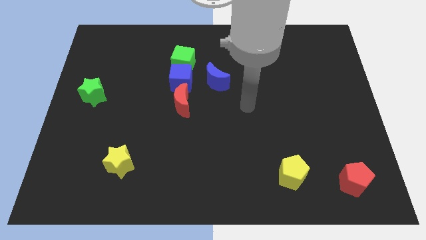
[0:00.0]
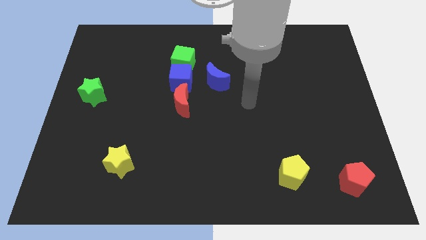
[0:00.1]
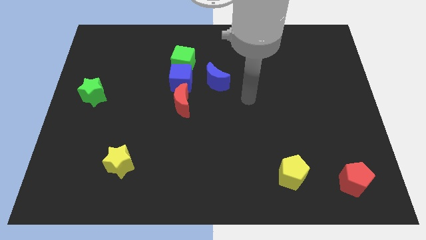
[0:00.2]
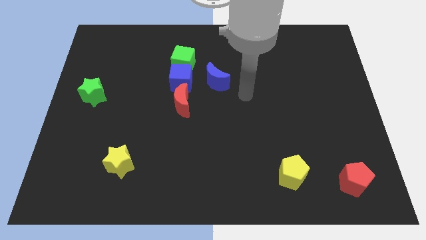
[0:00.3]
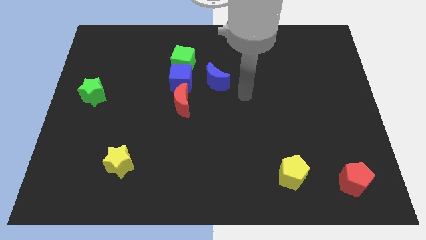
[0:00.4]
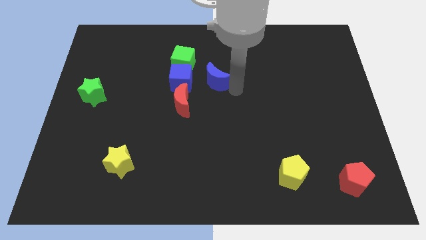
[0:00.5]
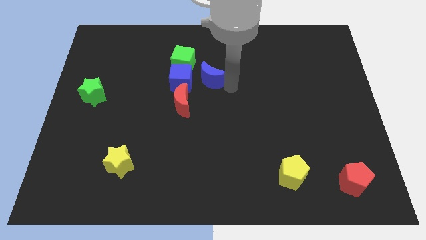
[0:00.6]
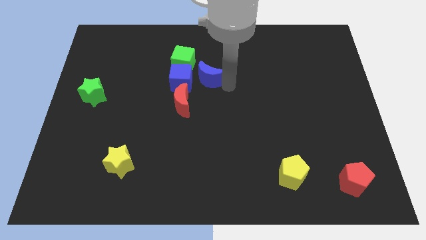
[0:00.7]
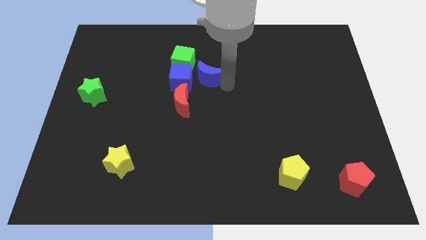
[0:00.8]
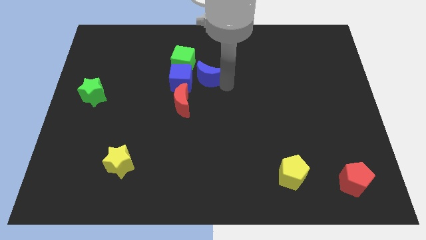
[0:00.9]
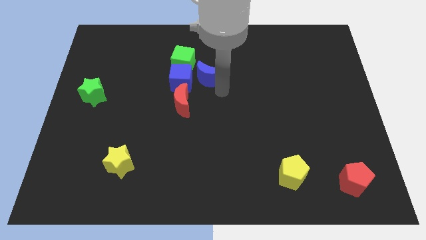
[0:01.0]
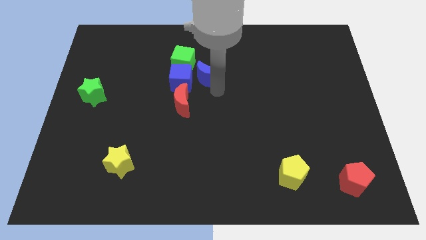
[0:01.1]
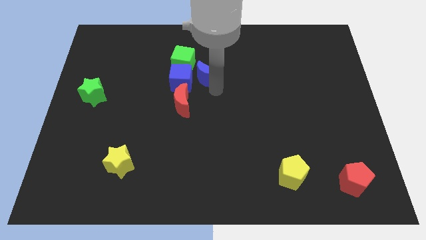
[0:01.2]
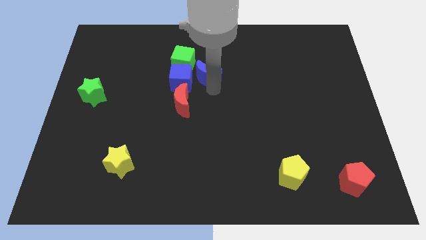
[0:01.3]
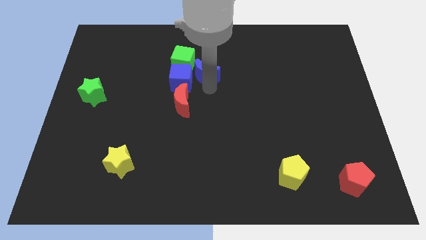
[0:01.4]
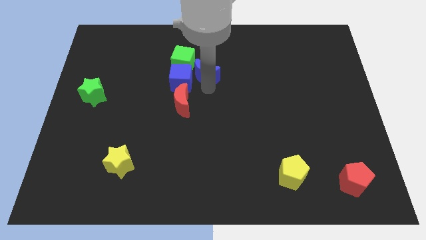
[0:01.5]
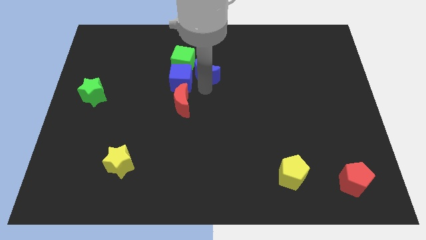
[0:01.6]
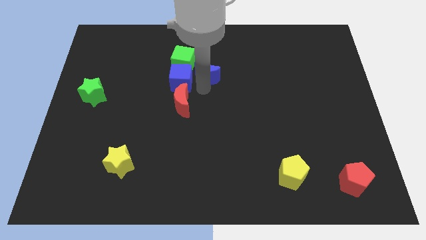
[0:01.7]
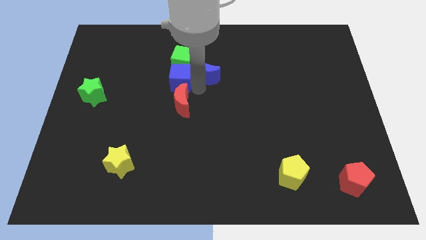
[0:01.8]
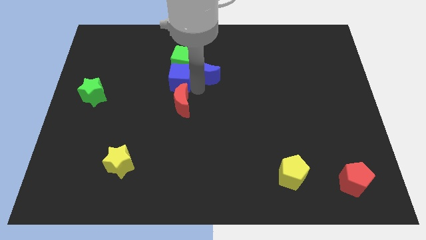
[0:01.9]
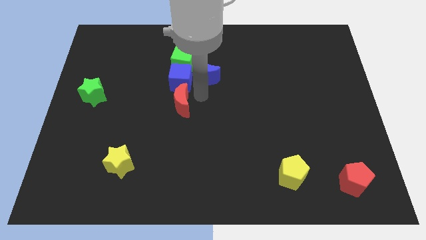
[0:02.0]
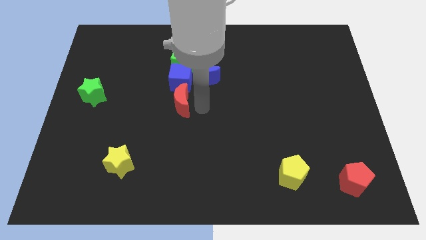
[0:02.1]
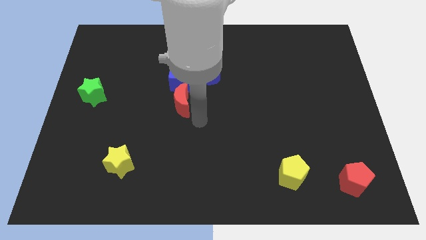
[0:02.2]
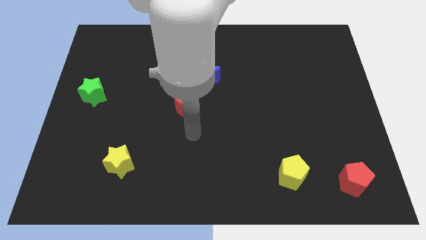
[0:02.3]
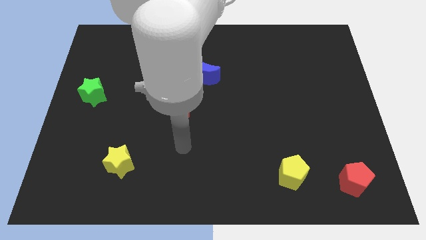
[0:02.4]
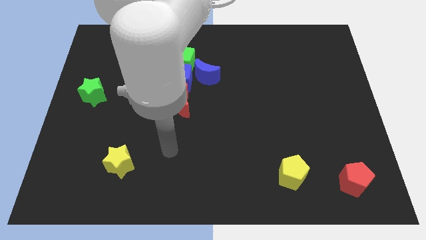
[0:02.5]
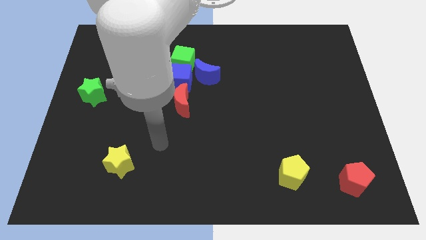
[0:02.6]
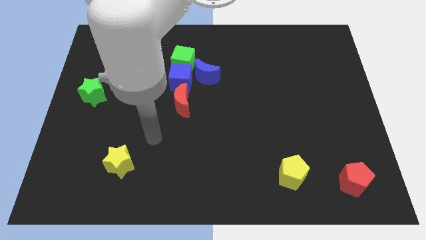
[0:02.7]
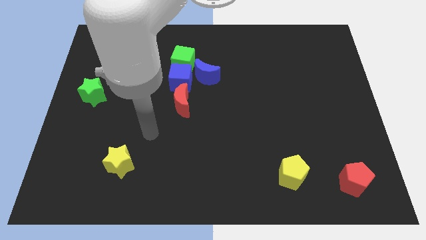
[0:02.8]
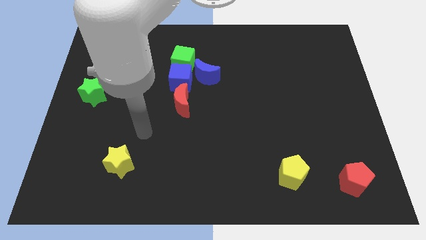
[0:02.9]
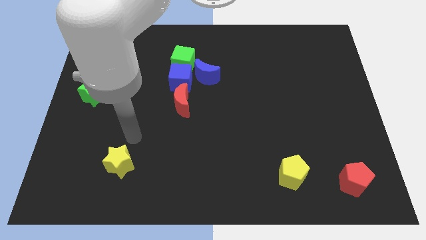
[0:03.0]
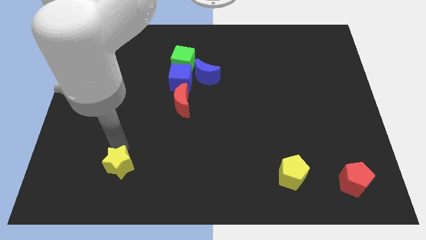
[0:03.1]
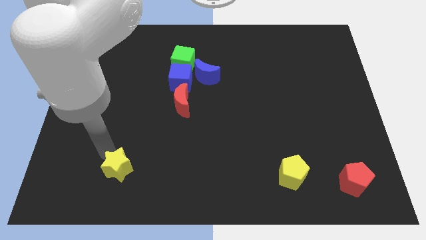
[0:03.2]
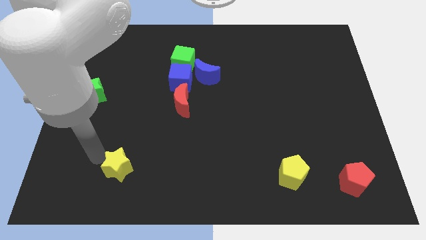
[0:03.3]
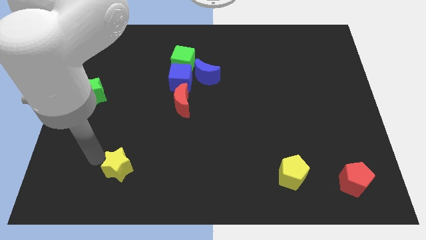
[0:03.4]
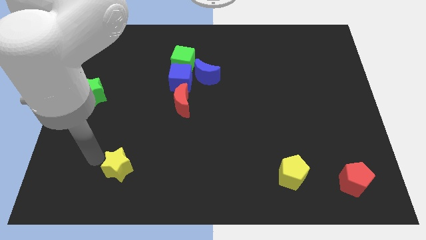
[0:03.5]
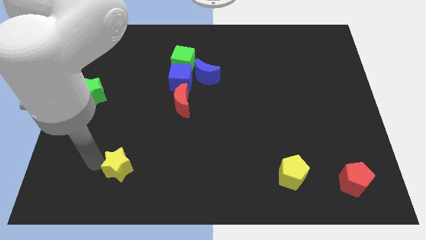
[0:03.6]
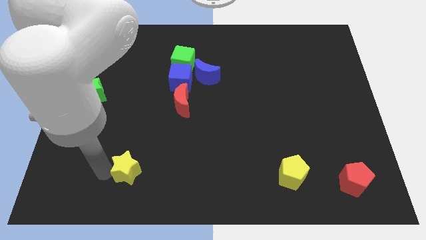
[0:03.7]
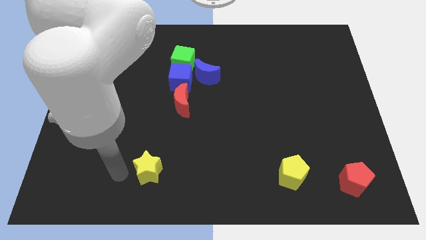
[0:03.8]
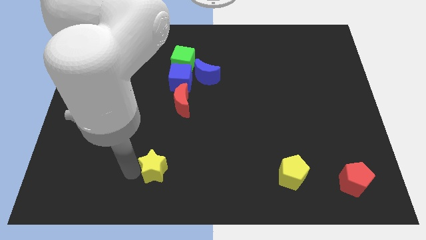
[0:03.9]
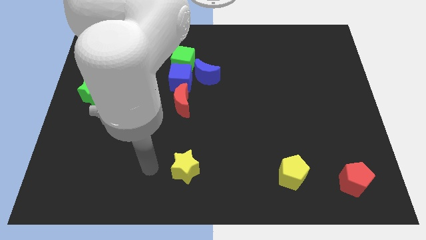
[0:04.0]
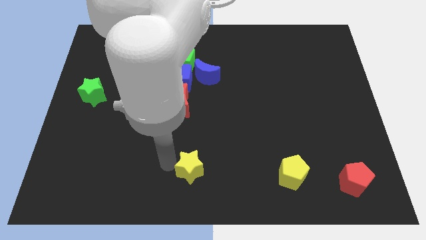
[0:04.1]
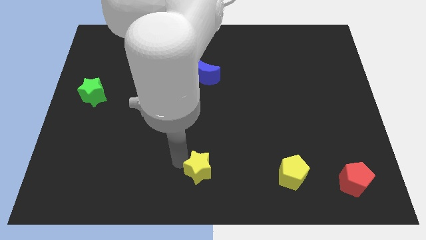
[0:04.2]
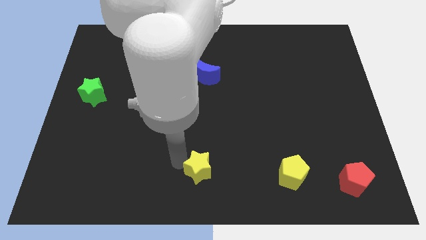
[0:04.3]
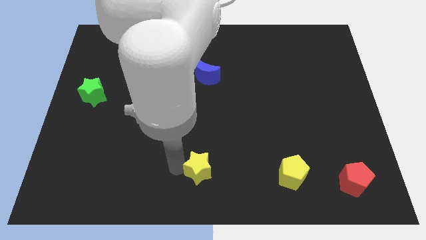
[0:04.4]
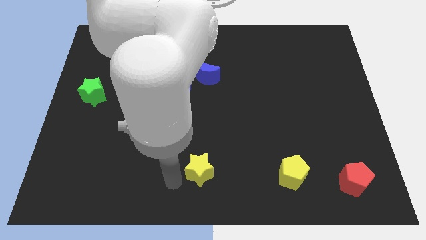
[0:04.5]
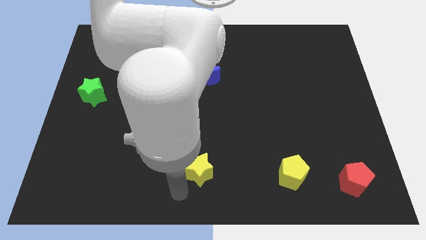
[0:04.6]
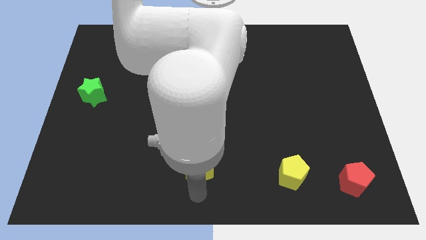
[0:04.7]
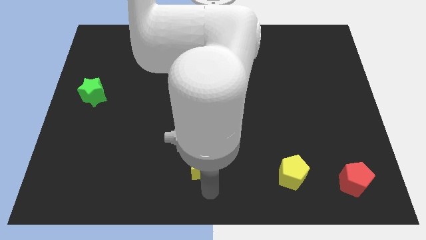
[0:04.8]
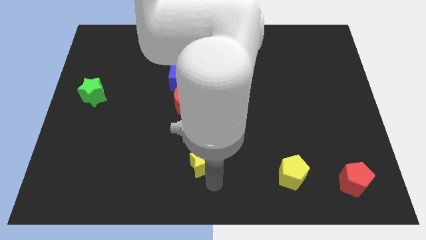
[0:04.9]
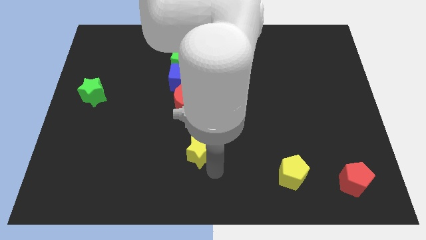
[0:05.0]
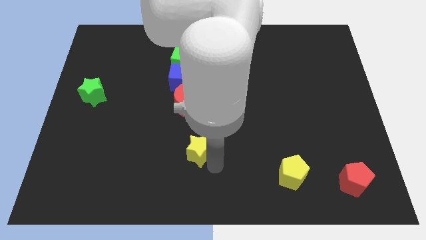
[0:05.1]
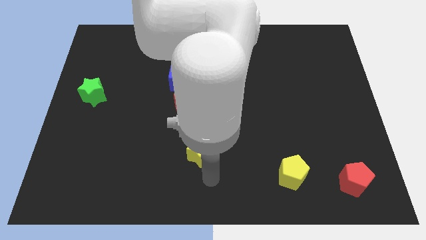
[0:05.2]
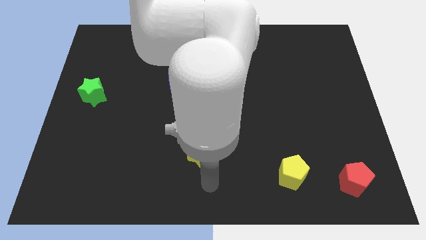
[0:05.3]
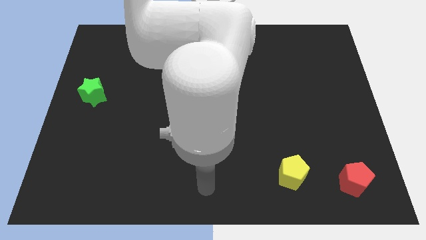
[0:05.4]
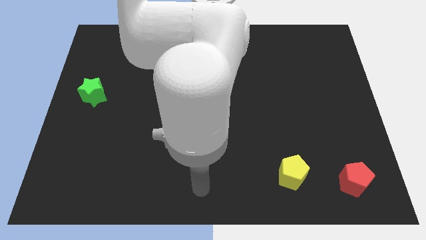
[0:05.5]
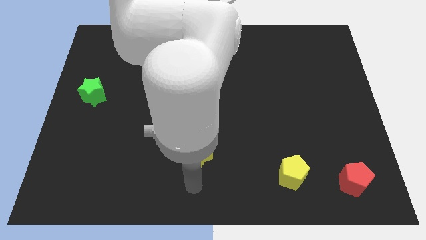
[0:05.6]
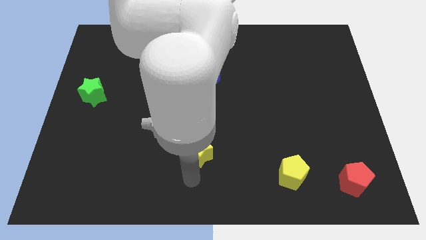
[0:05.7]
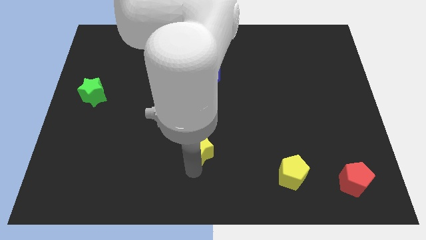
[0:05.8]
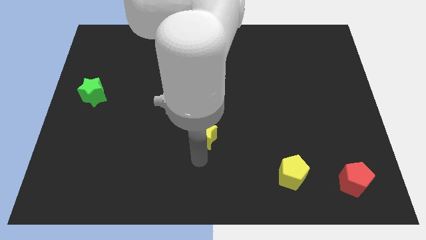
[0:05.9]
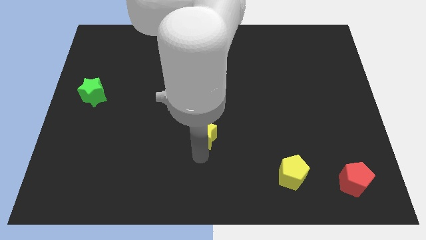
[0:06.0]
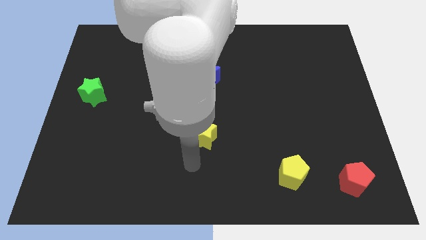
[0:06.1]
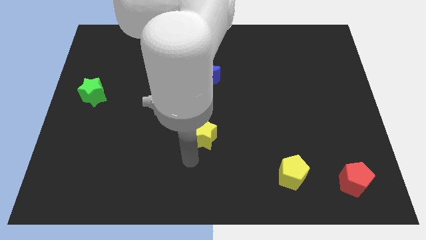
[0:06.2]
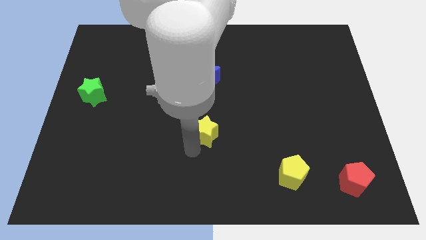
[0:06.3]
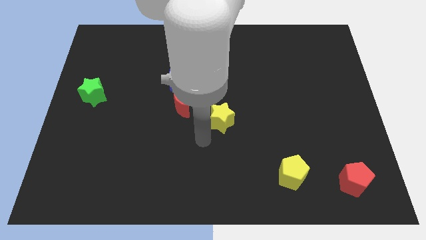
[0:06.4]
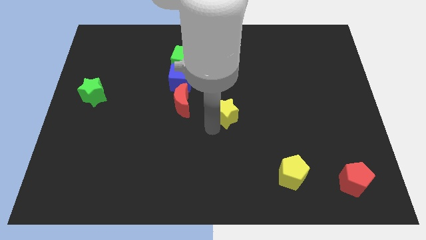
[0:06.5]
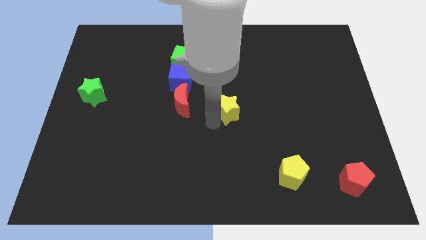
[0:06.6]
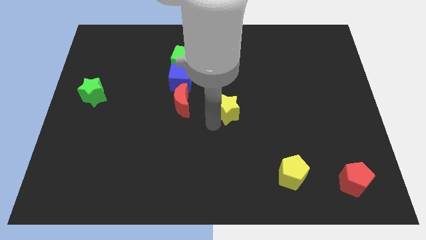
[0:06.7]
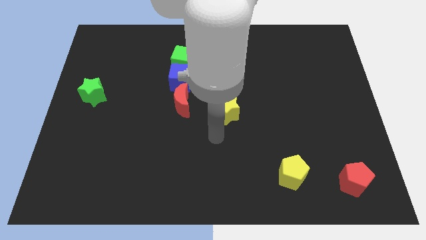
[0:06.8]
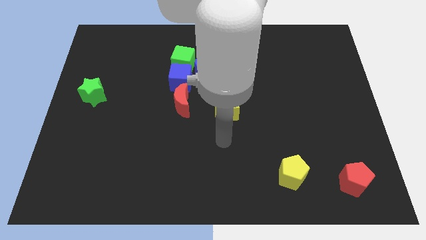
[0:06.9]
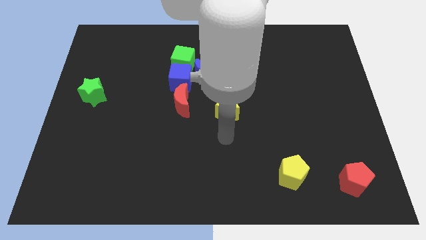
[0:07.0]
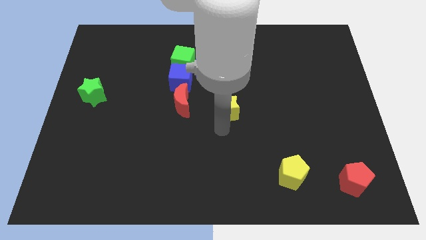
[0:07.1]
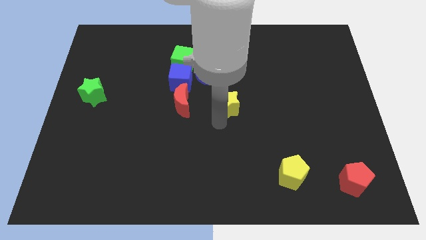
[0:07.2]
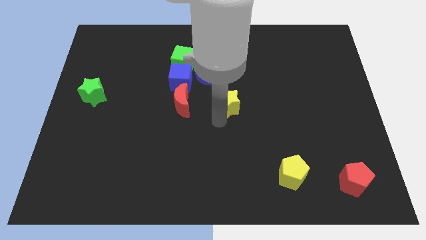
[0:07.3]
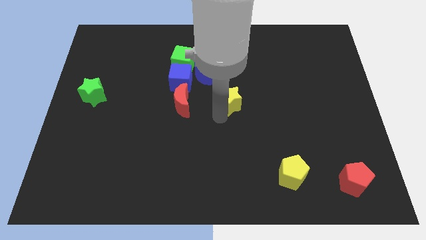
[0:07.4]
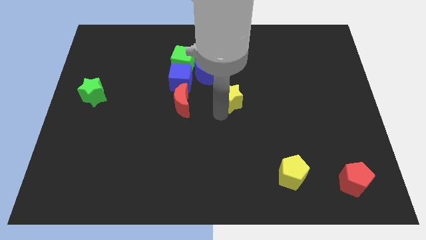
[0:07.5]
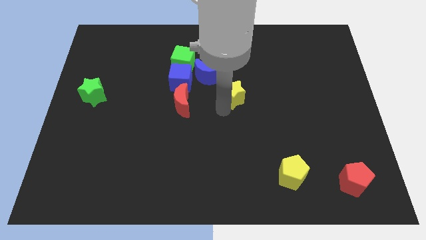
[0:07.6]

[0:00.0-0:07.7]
slide the yellow star to the right of red crescent

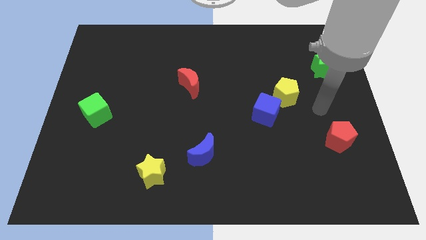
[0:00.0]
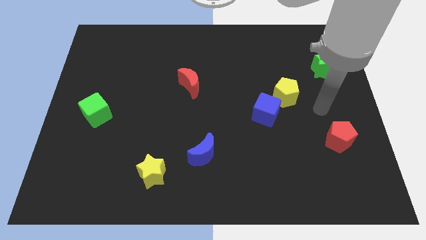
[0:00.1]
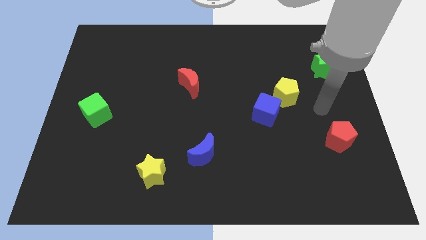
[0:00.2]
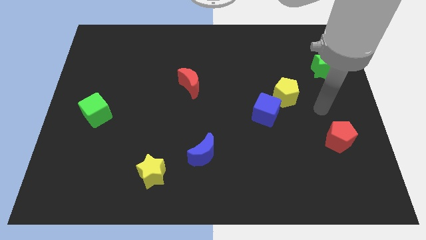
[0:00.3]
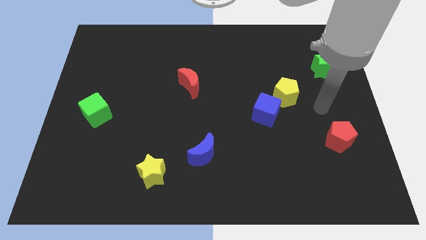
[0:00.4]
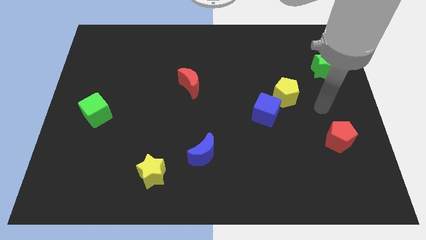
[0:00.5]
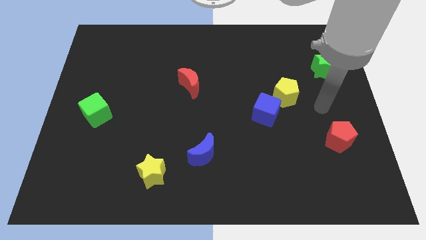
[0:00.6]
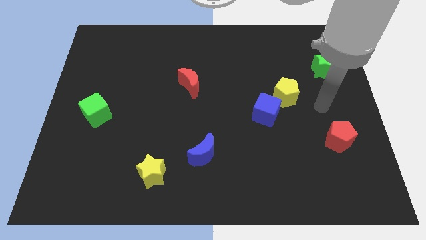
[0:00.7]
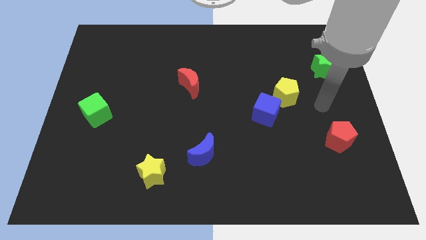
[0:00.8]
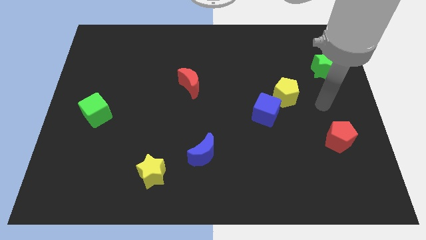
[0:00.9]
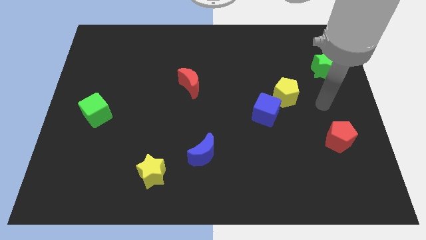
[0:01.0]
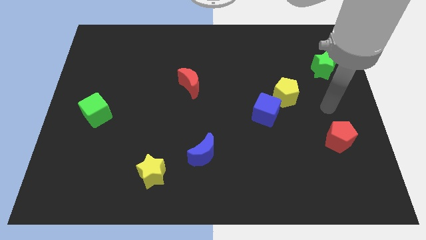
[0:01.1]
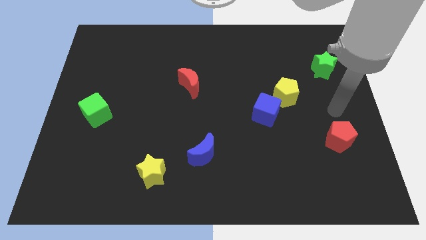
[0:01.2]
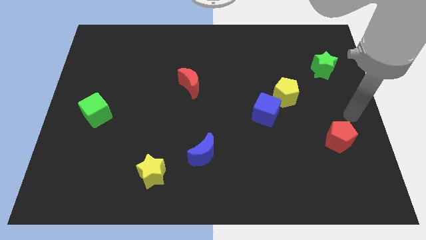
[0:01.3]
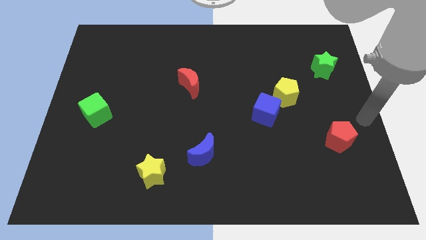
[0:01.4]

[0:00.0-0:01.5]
point your hand at the top right side of the red pentagon
